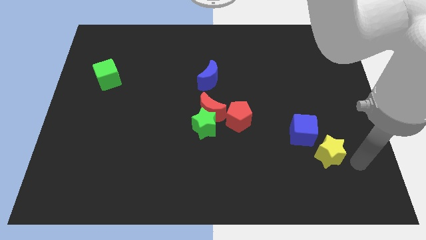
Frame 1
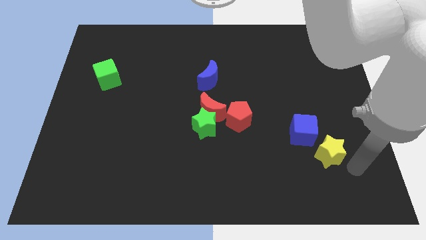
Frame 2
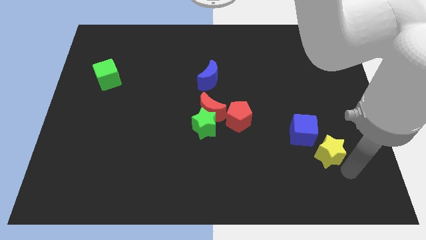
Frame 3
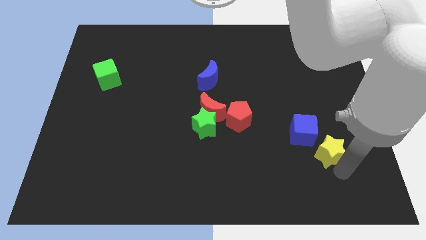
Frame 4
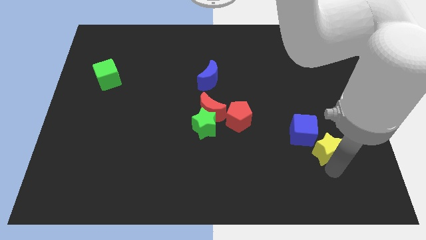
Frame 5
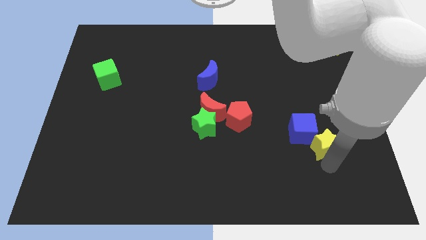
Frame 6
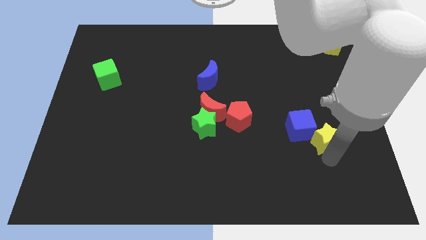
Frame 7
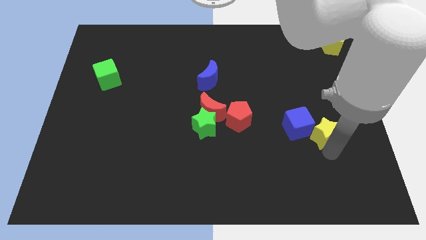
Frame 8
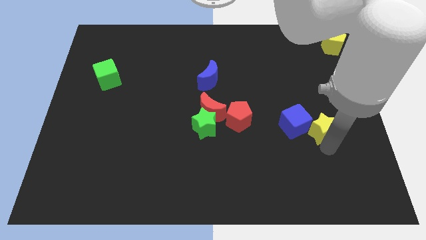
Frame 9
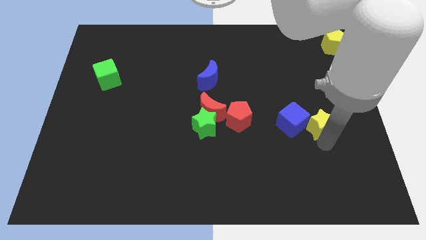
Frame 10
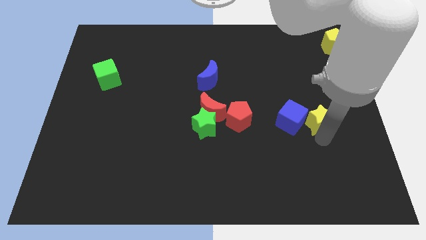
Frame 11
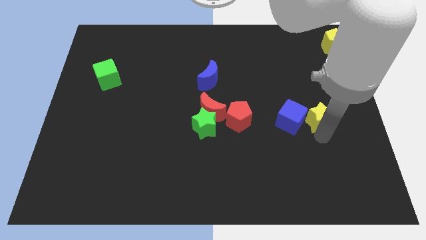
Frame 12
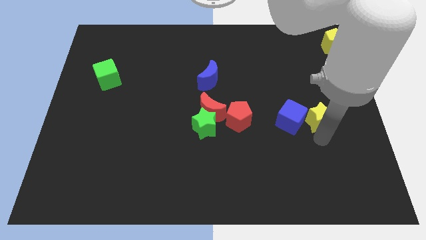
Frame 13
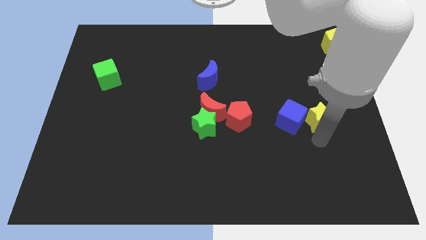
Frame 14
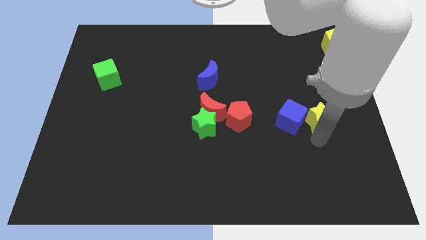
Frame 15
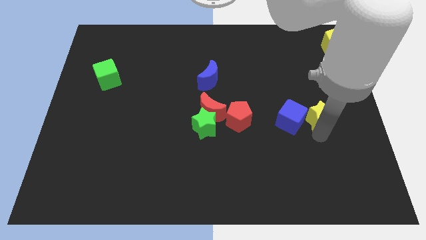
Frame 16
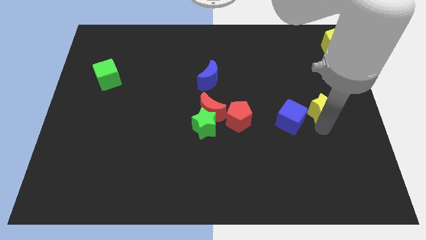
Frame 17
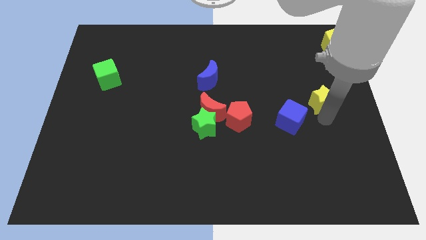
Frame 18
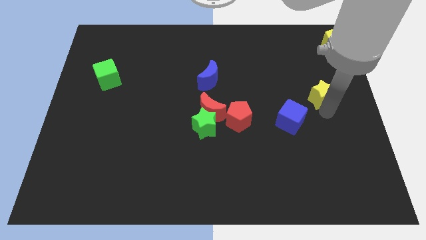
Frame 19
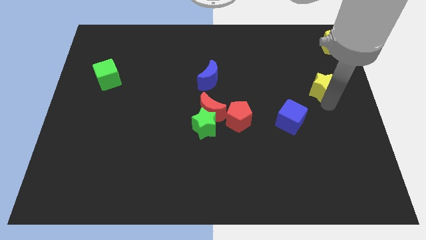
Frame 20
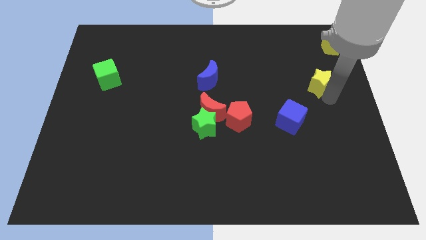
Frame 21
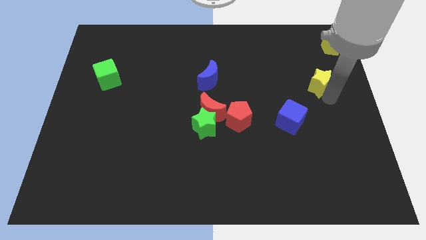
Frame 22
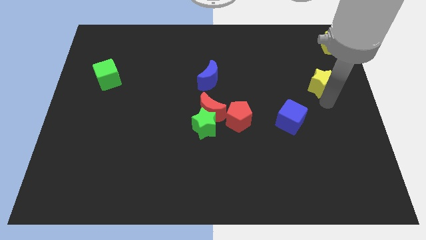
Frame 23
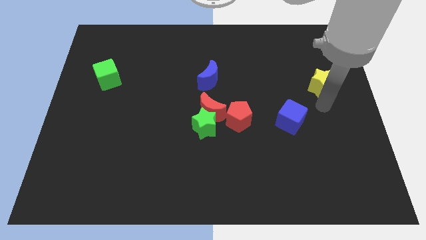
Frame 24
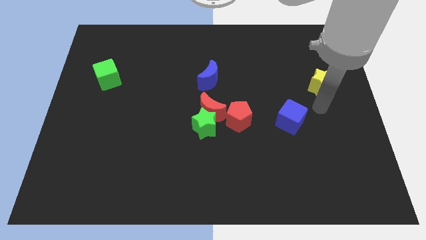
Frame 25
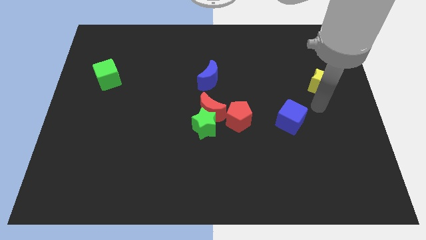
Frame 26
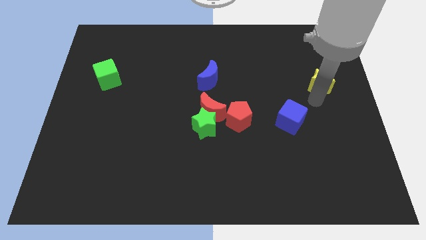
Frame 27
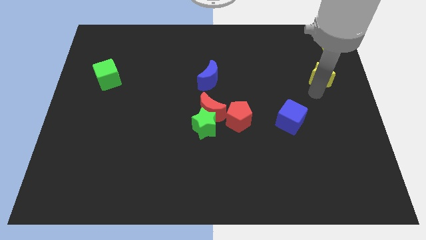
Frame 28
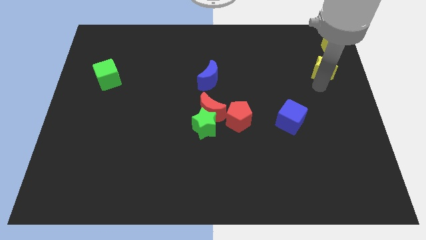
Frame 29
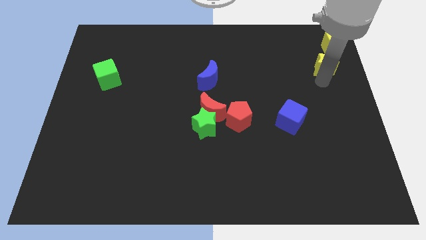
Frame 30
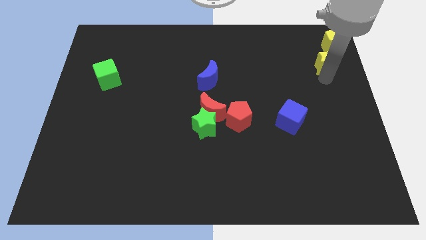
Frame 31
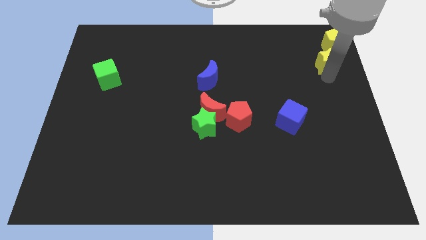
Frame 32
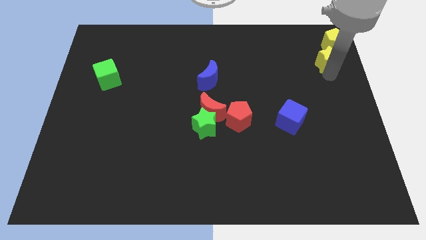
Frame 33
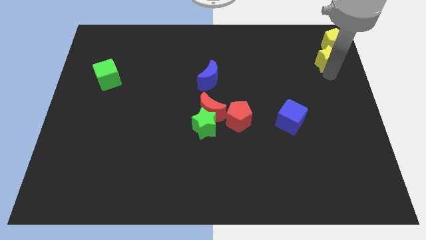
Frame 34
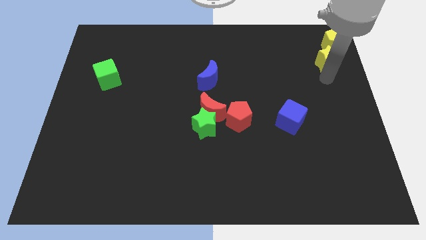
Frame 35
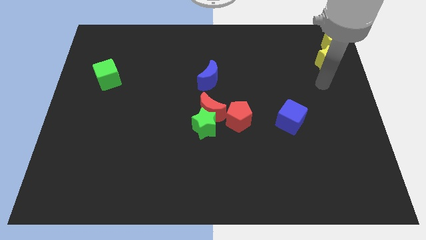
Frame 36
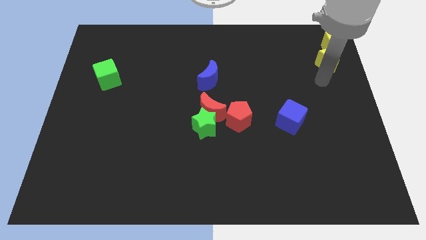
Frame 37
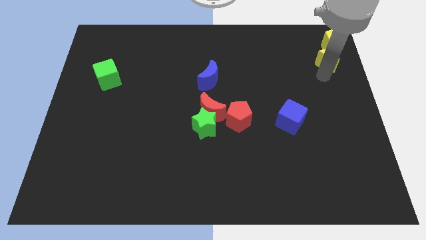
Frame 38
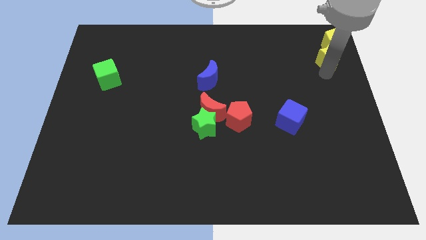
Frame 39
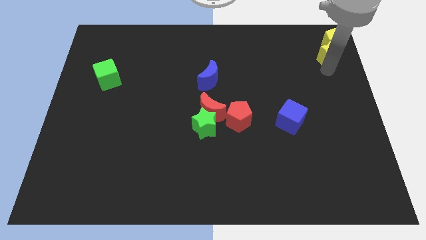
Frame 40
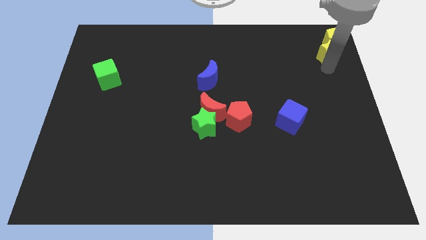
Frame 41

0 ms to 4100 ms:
move yellow star in to bottom of yellow pentagon

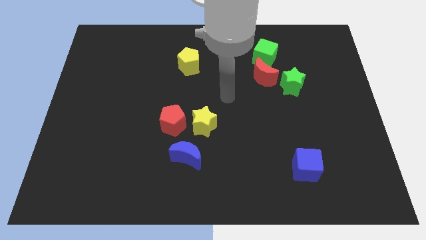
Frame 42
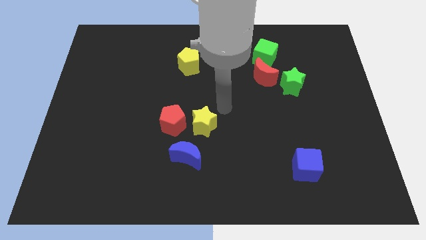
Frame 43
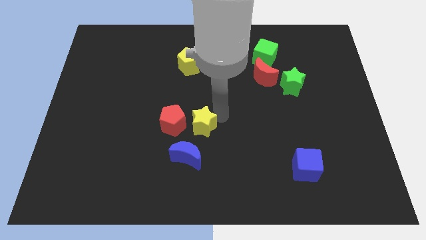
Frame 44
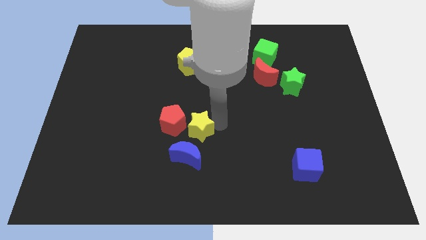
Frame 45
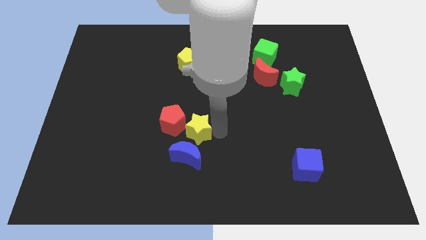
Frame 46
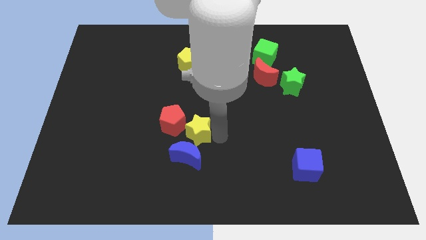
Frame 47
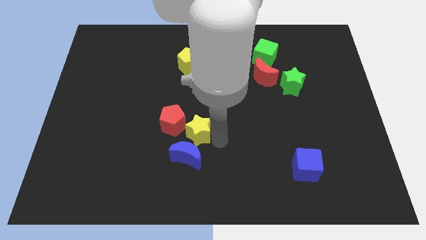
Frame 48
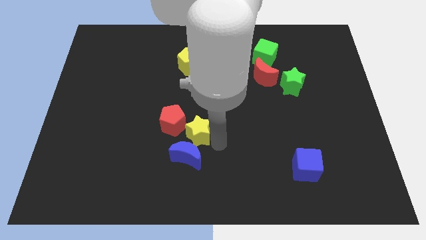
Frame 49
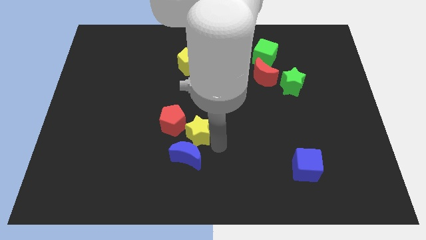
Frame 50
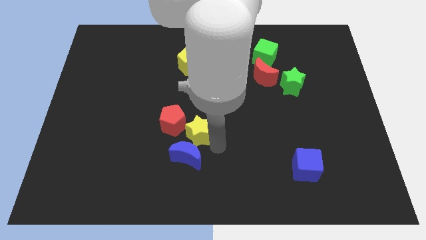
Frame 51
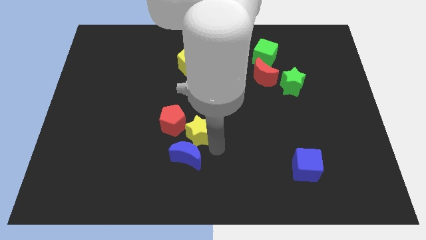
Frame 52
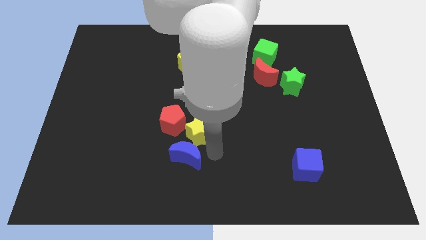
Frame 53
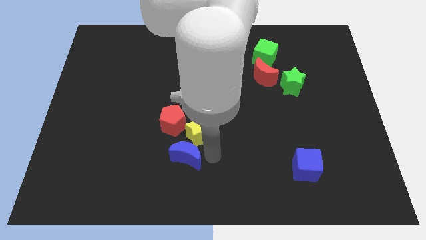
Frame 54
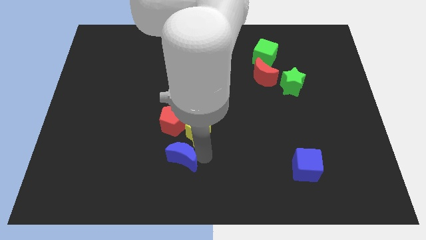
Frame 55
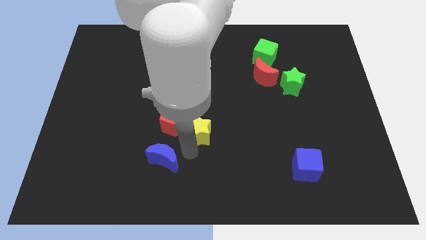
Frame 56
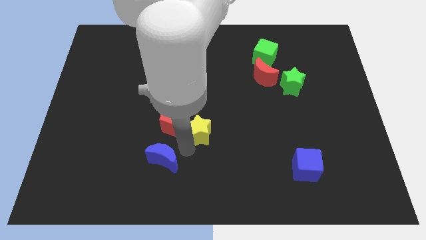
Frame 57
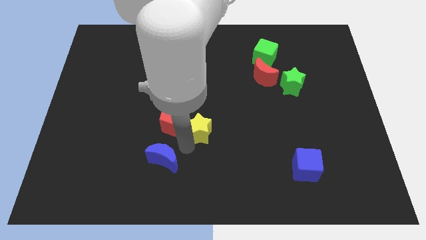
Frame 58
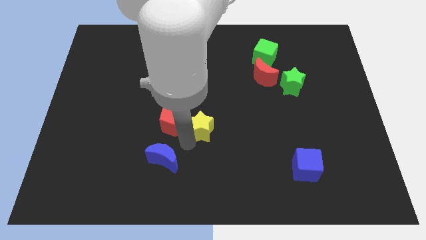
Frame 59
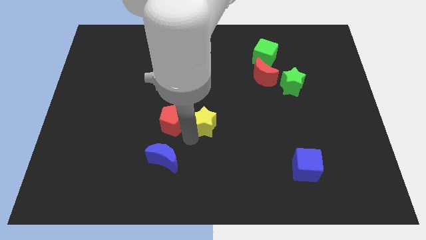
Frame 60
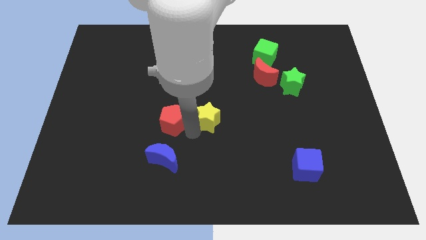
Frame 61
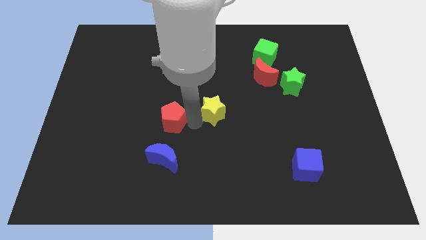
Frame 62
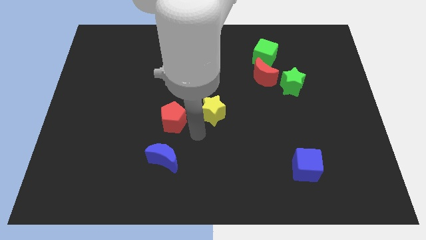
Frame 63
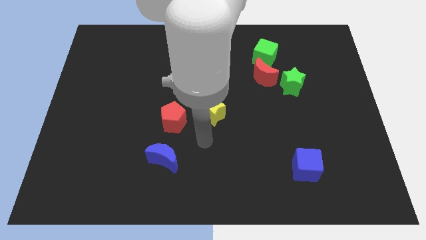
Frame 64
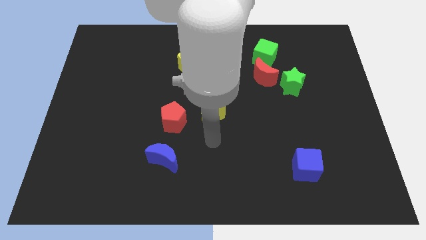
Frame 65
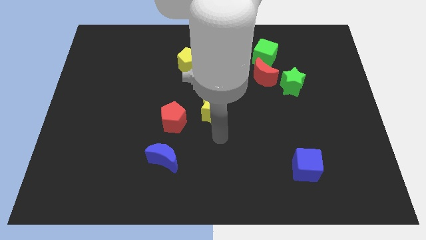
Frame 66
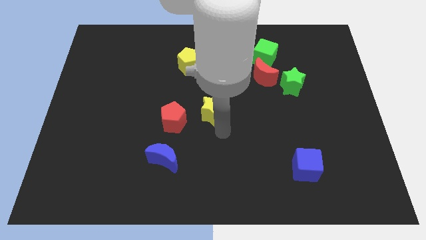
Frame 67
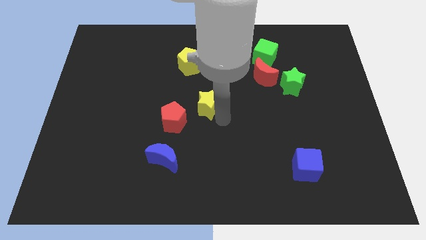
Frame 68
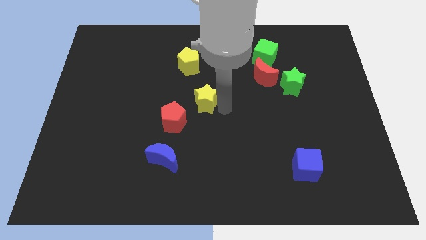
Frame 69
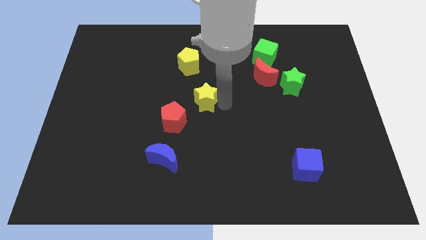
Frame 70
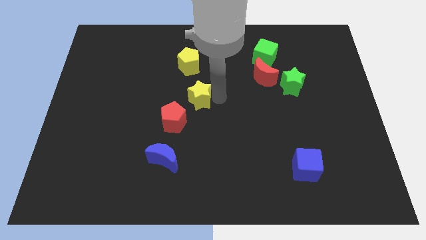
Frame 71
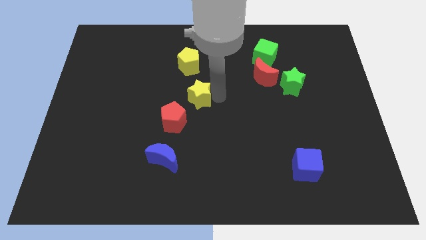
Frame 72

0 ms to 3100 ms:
separate yellow star and blue moon from red pentagon

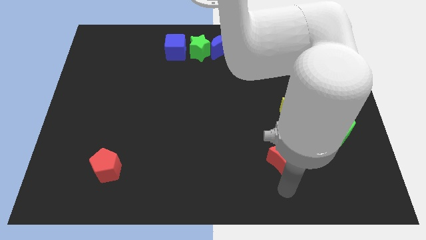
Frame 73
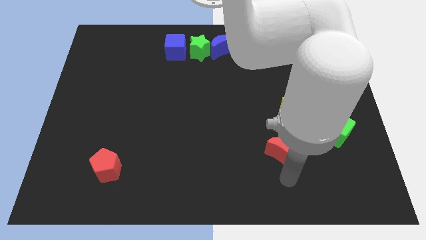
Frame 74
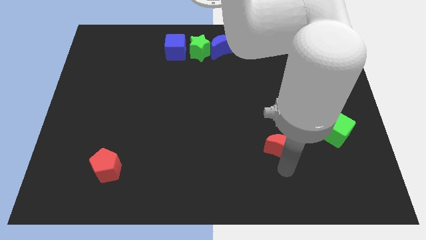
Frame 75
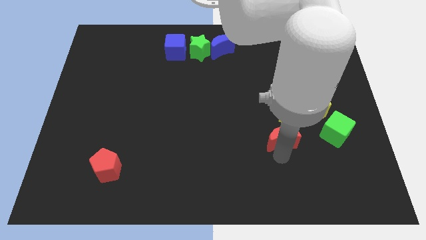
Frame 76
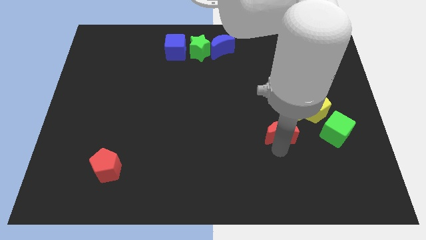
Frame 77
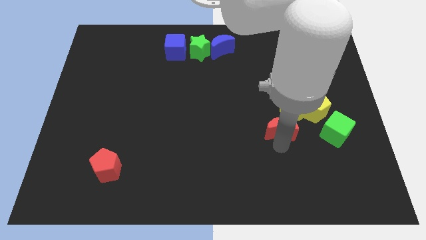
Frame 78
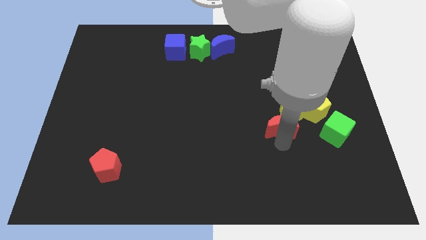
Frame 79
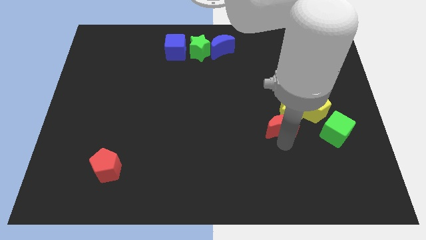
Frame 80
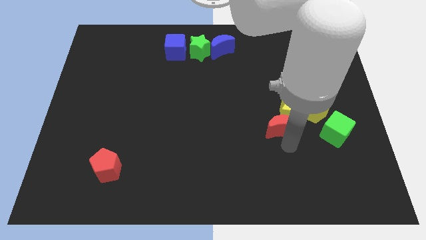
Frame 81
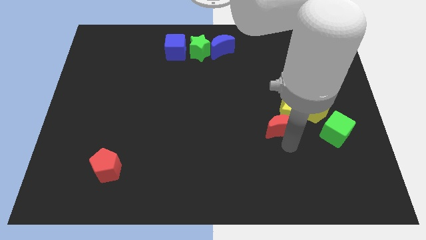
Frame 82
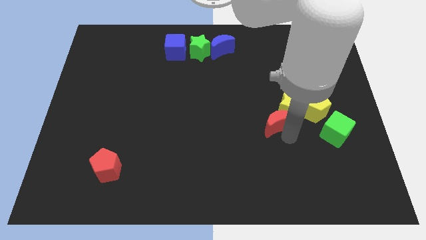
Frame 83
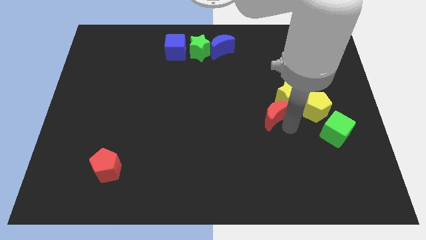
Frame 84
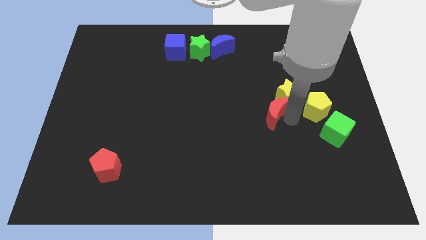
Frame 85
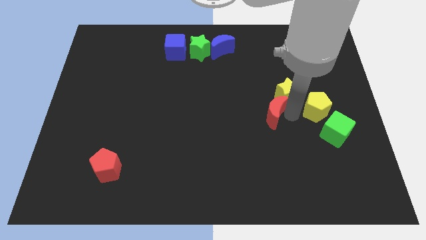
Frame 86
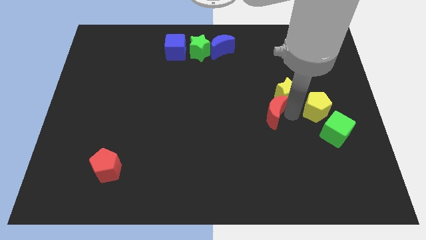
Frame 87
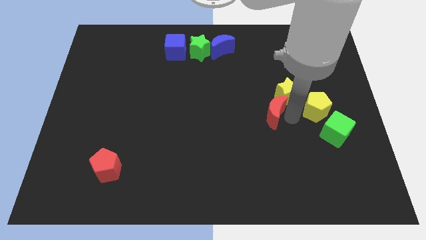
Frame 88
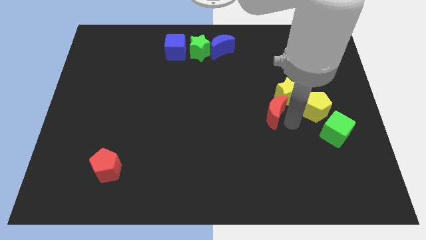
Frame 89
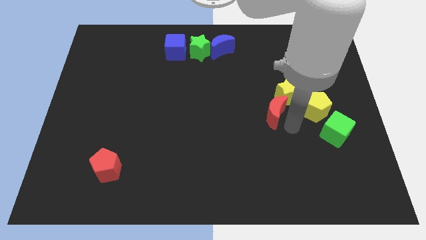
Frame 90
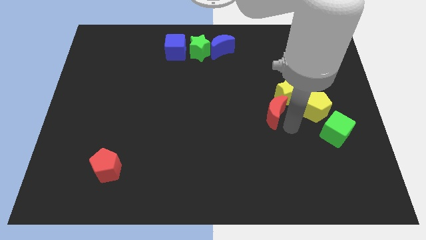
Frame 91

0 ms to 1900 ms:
move the red crescent towards the bottom left side of the yellow star
